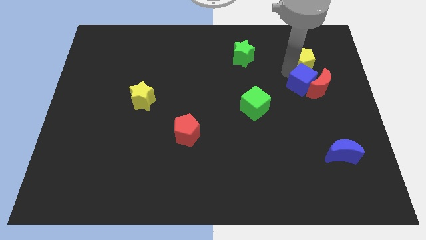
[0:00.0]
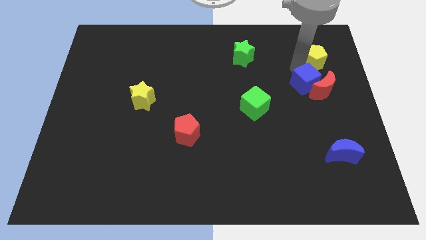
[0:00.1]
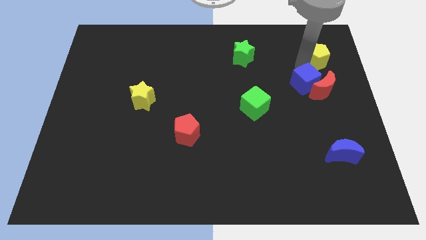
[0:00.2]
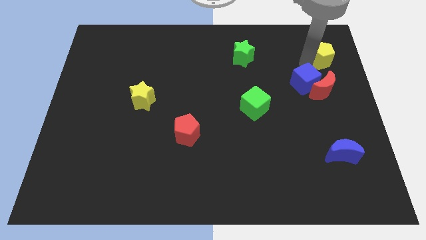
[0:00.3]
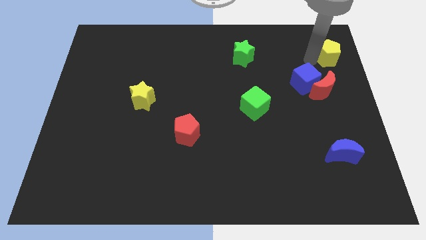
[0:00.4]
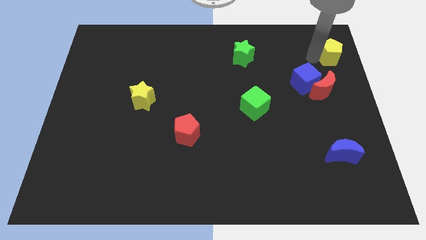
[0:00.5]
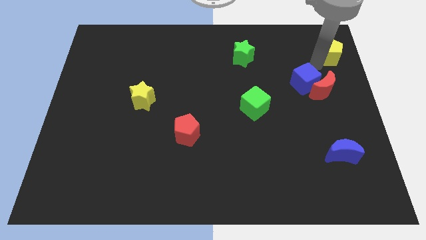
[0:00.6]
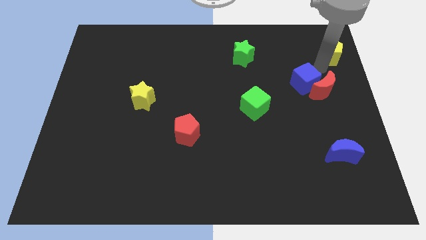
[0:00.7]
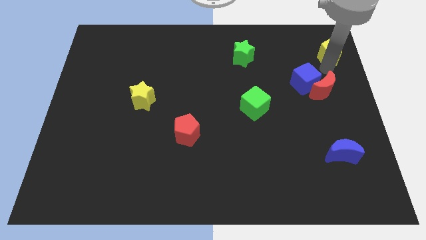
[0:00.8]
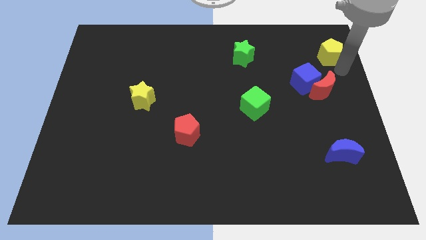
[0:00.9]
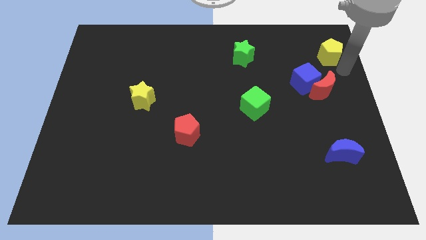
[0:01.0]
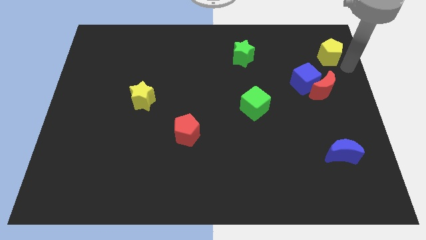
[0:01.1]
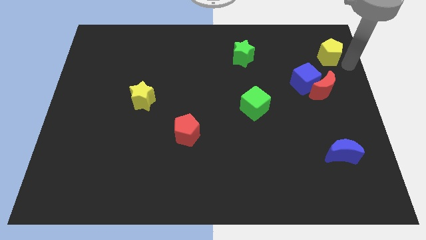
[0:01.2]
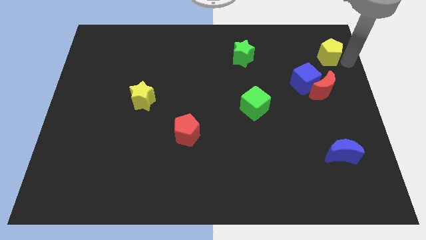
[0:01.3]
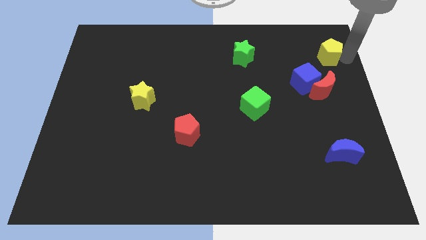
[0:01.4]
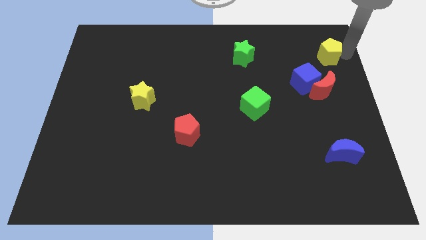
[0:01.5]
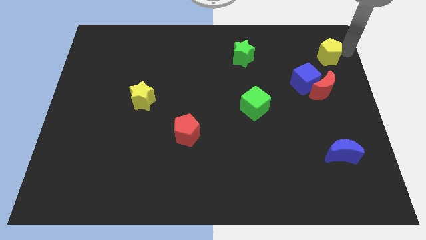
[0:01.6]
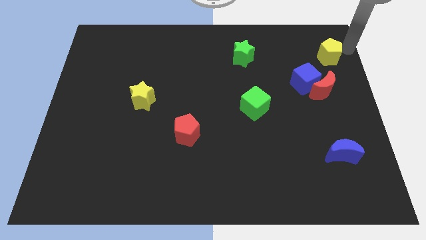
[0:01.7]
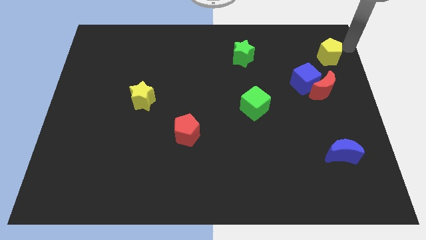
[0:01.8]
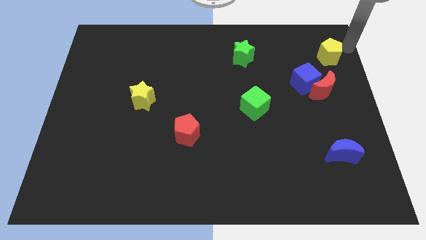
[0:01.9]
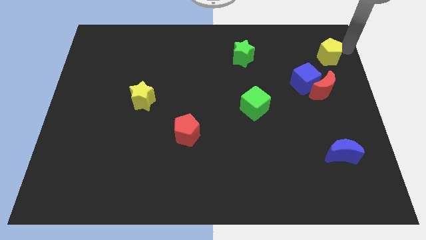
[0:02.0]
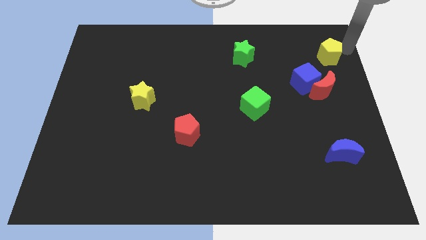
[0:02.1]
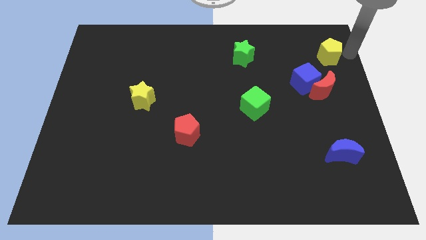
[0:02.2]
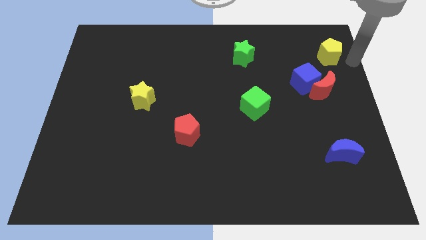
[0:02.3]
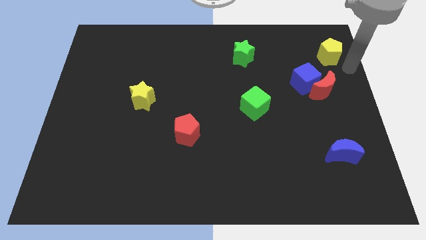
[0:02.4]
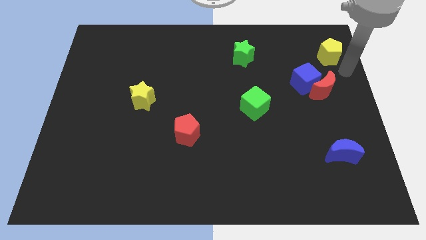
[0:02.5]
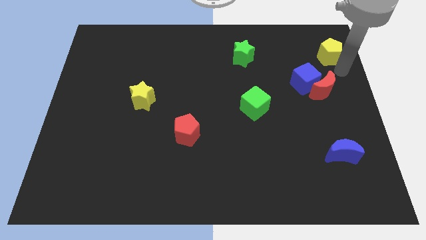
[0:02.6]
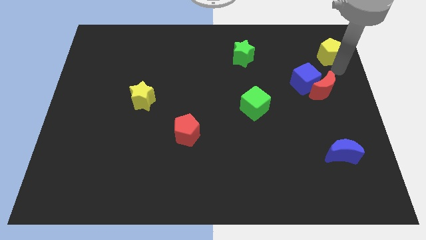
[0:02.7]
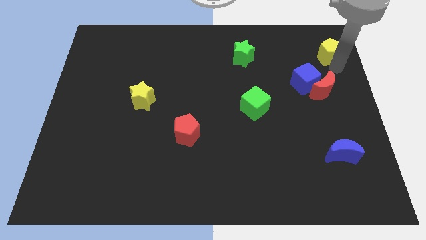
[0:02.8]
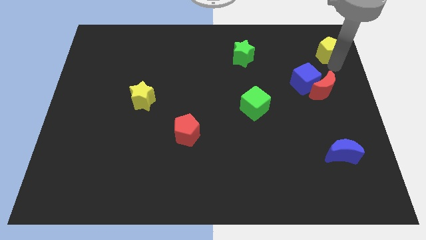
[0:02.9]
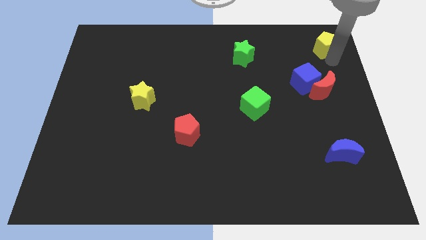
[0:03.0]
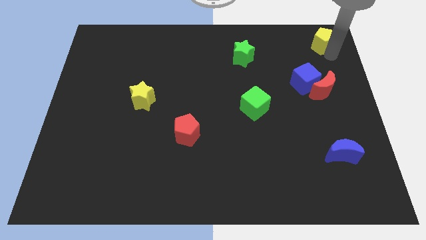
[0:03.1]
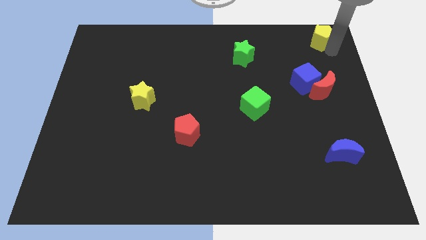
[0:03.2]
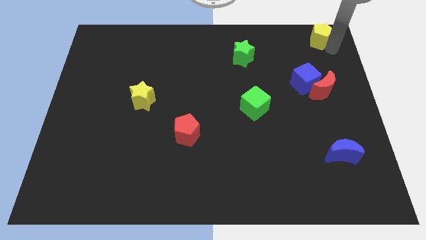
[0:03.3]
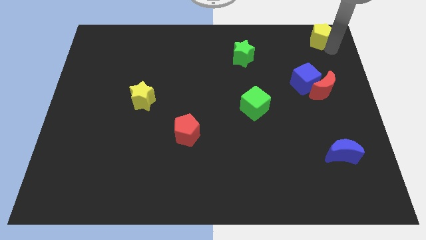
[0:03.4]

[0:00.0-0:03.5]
separate the yellow pentagon from the blue cube

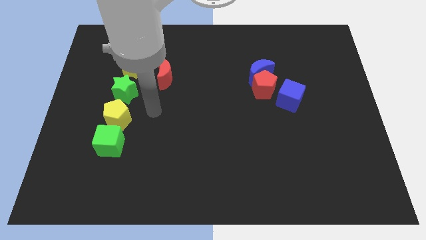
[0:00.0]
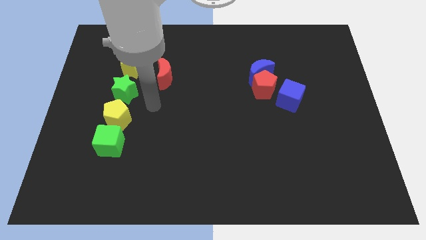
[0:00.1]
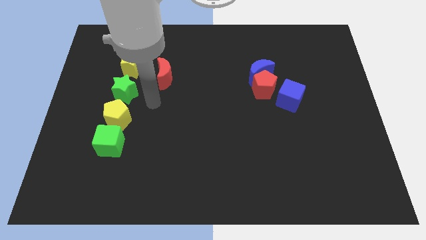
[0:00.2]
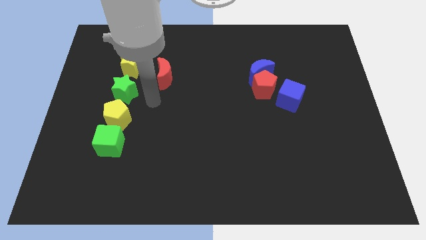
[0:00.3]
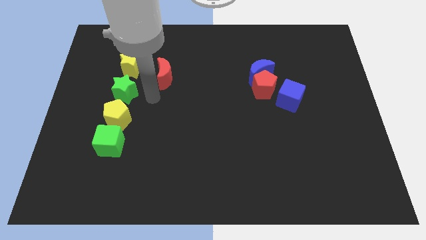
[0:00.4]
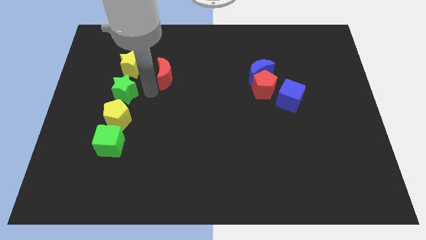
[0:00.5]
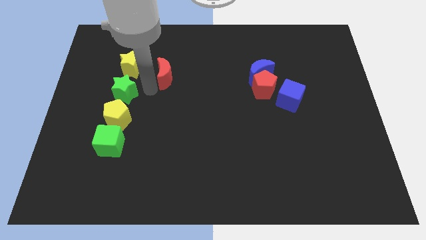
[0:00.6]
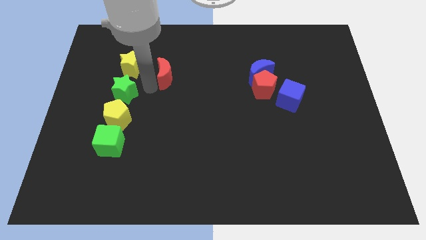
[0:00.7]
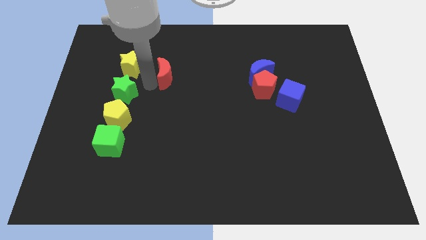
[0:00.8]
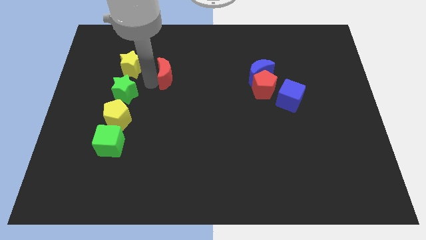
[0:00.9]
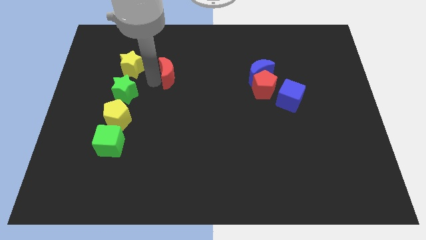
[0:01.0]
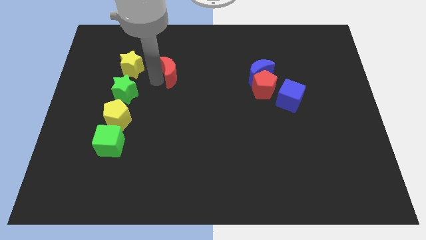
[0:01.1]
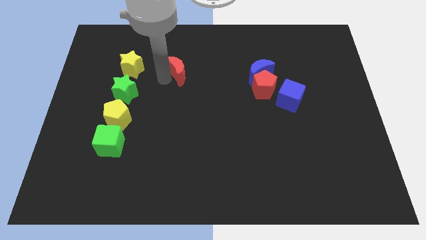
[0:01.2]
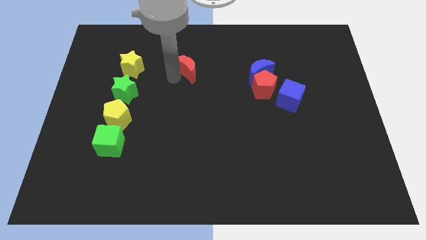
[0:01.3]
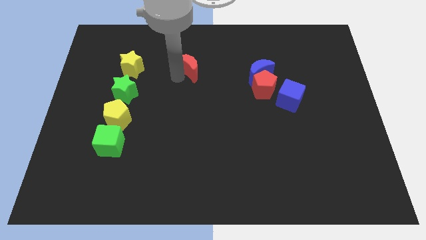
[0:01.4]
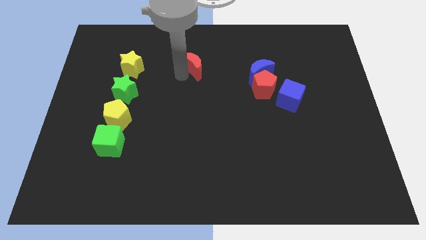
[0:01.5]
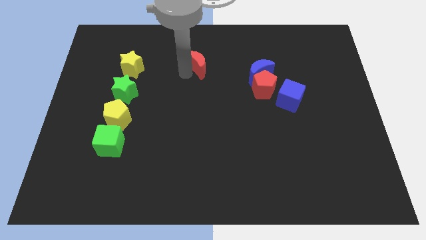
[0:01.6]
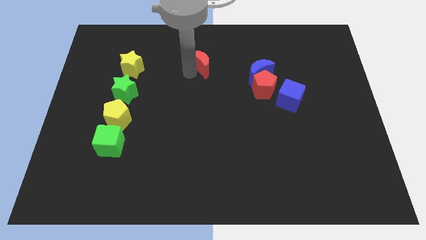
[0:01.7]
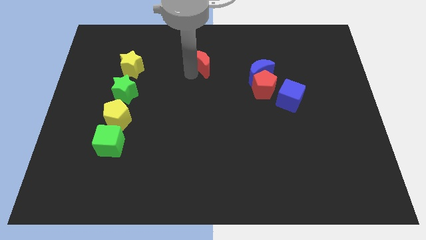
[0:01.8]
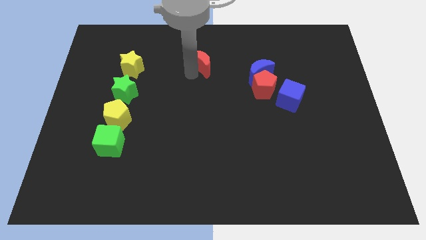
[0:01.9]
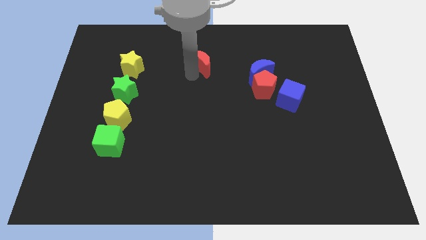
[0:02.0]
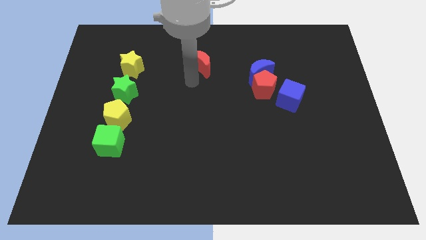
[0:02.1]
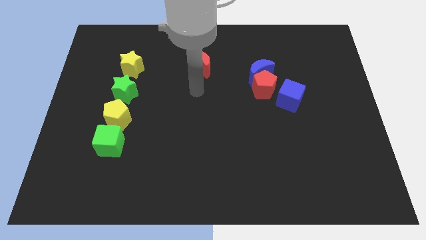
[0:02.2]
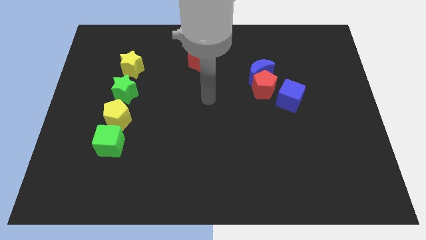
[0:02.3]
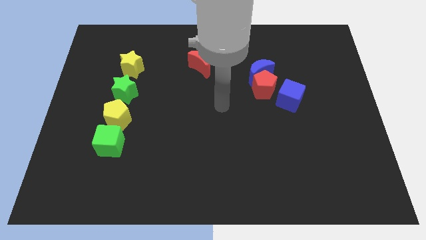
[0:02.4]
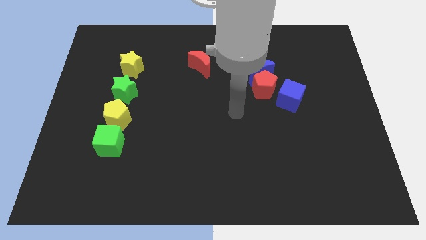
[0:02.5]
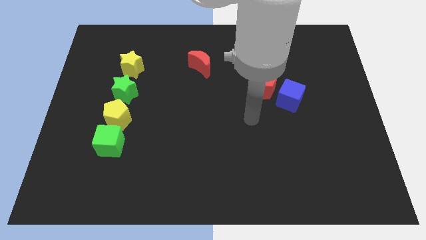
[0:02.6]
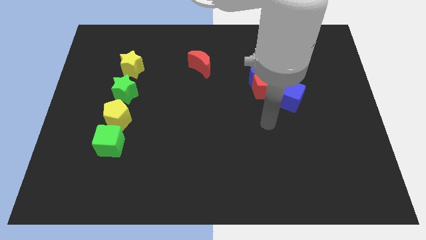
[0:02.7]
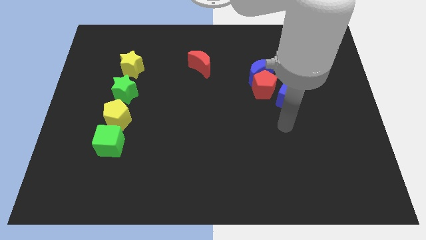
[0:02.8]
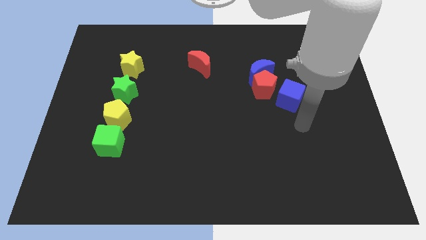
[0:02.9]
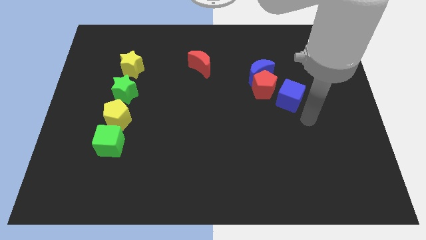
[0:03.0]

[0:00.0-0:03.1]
move the red moon diagonally top left to the red pentagon

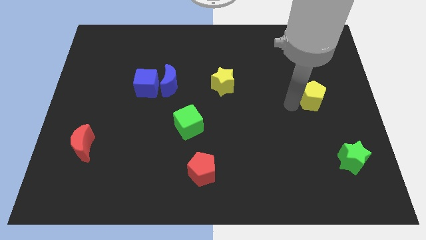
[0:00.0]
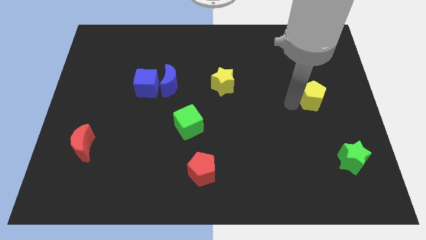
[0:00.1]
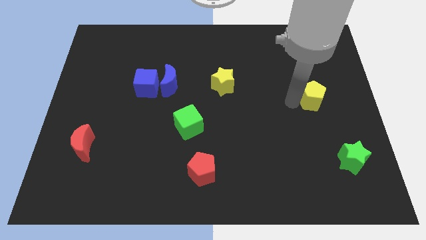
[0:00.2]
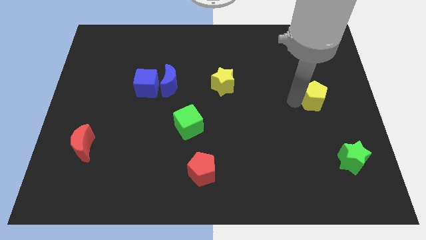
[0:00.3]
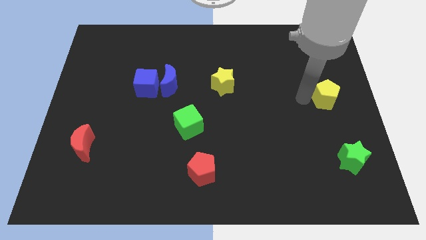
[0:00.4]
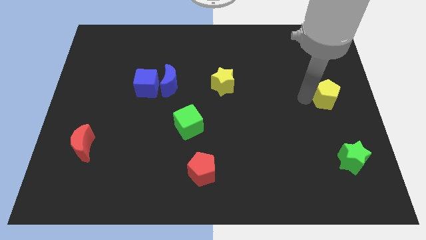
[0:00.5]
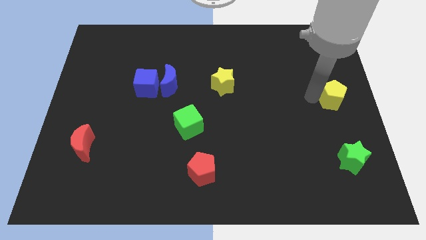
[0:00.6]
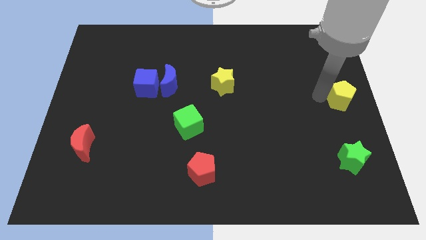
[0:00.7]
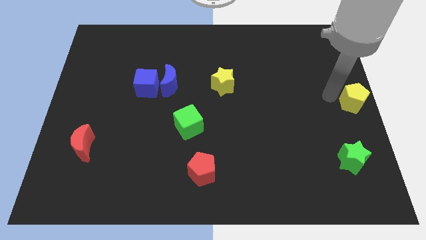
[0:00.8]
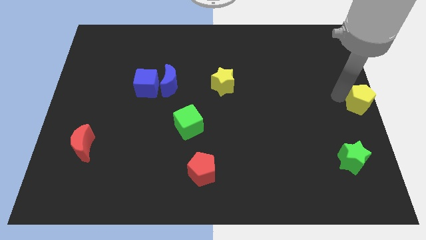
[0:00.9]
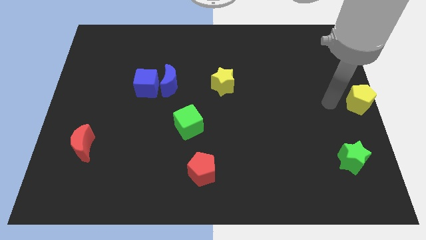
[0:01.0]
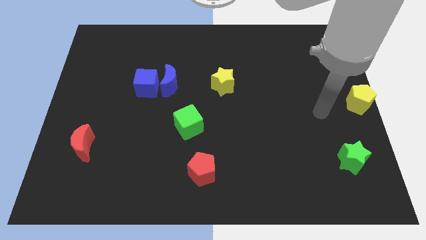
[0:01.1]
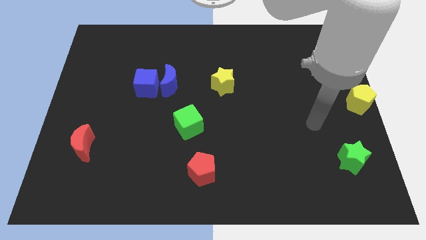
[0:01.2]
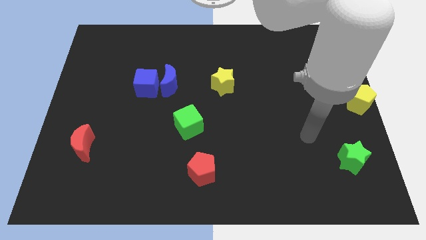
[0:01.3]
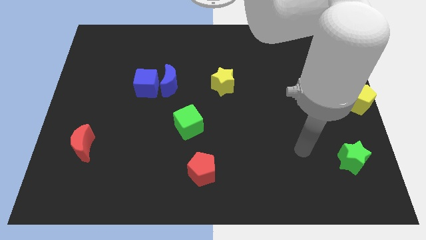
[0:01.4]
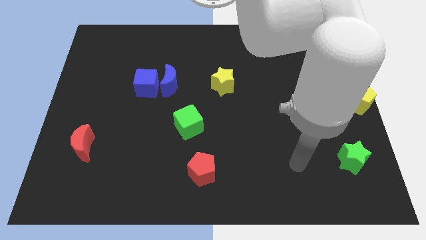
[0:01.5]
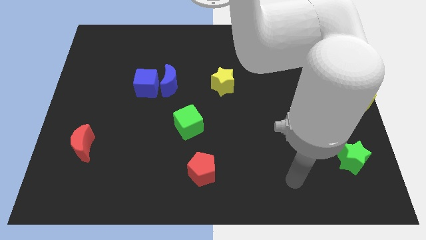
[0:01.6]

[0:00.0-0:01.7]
push yellow pentagon to the right center of the board

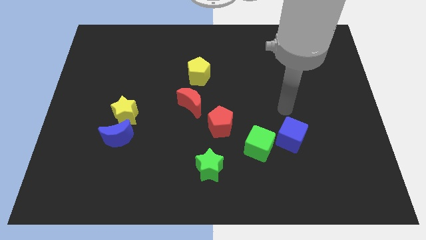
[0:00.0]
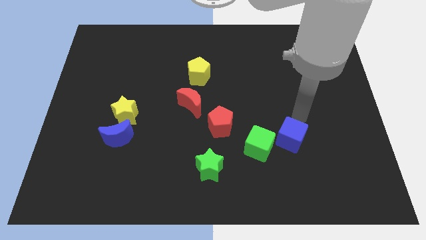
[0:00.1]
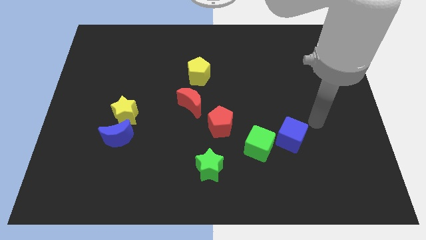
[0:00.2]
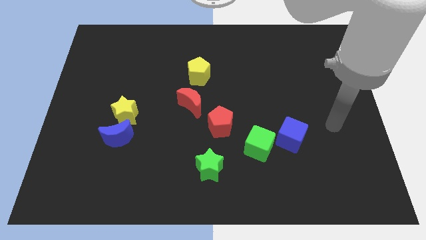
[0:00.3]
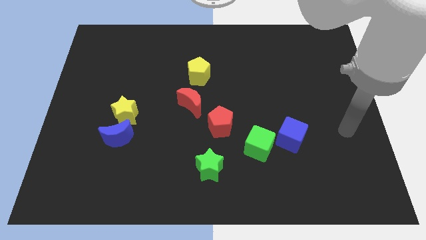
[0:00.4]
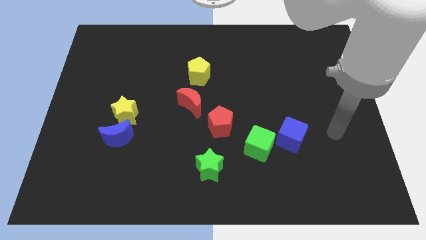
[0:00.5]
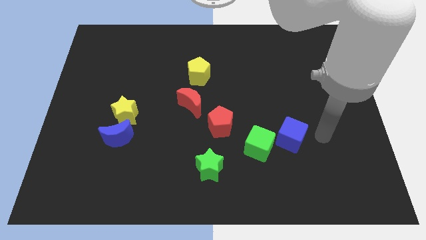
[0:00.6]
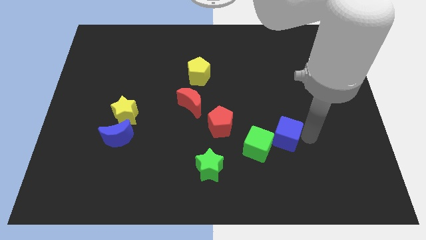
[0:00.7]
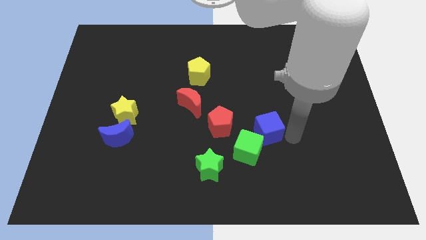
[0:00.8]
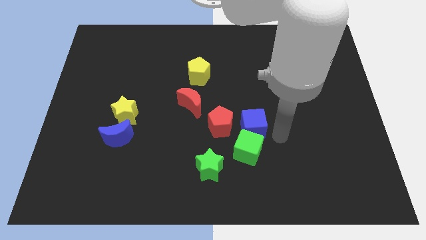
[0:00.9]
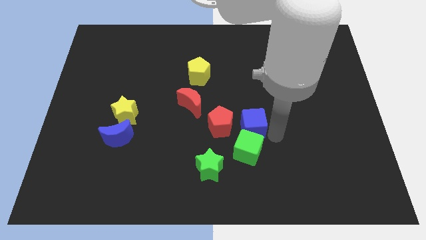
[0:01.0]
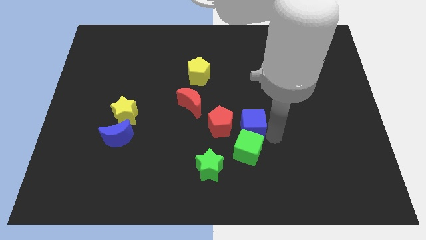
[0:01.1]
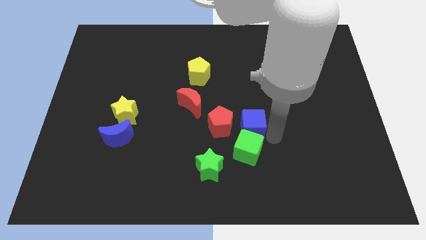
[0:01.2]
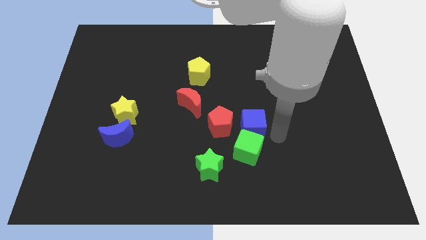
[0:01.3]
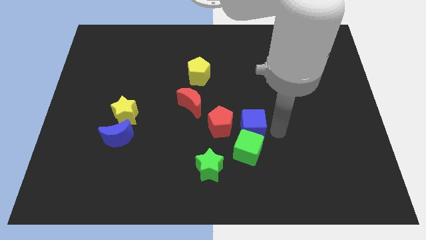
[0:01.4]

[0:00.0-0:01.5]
slightly push the green cube with blue cube towards the red pentagon
